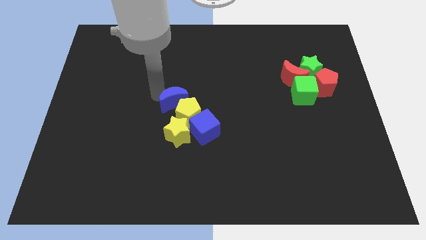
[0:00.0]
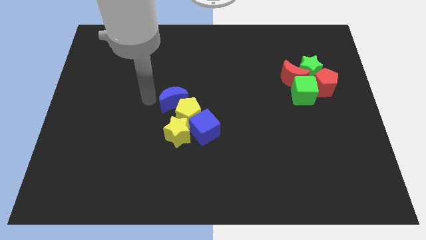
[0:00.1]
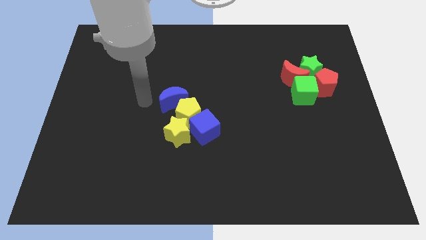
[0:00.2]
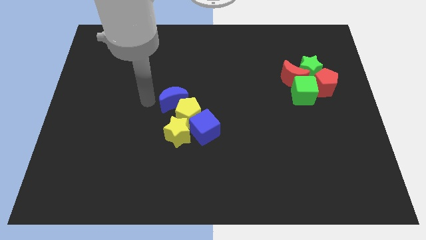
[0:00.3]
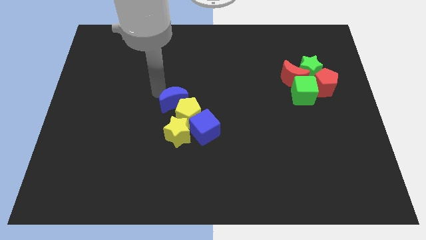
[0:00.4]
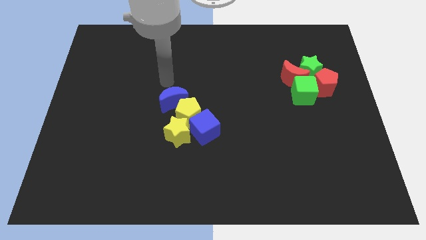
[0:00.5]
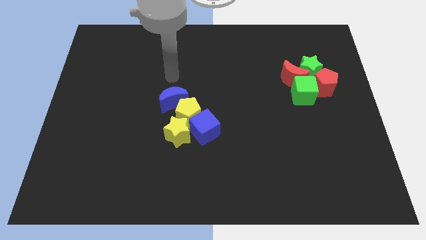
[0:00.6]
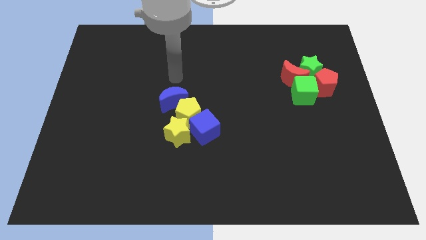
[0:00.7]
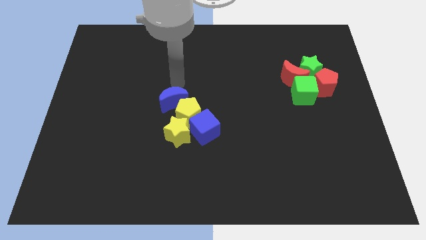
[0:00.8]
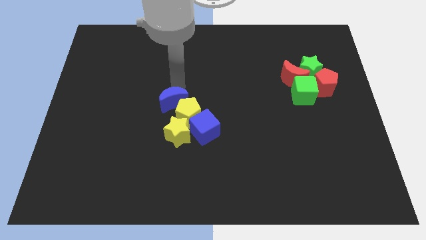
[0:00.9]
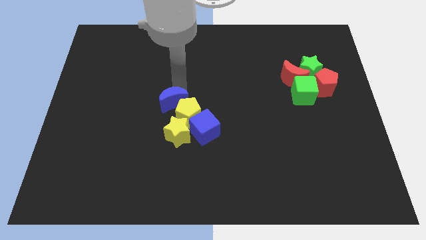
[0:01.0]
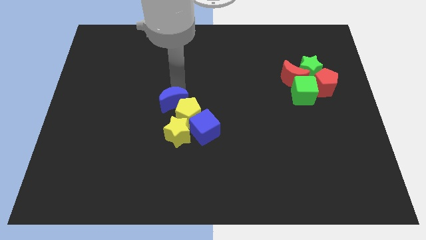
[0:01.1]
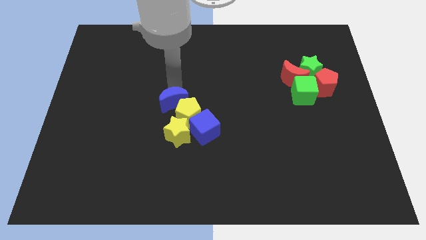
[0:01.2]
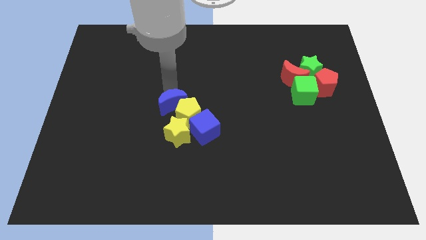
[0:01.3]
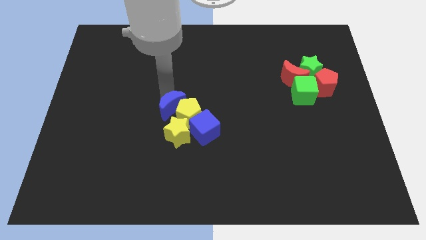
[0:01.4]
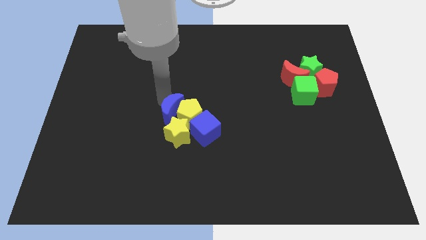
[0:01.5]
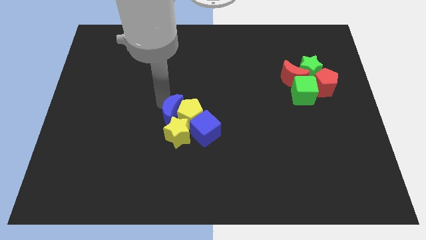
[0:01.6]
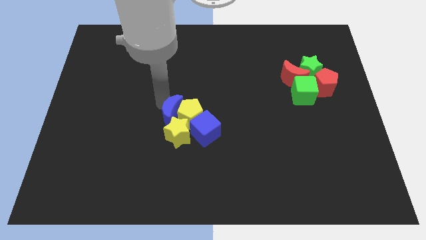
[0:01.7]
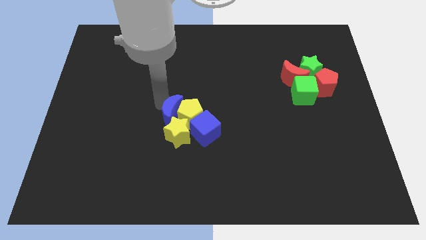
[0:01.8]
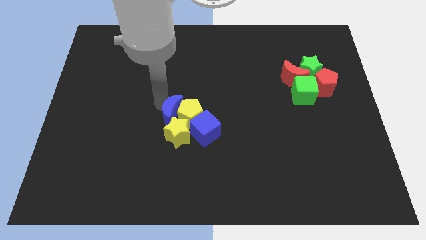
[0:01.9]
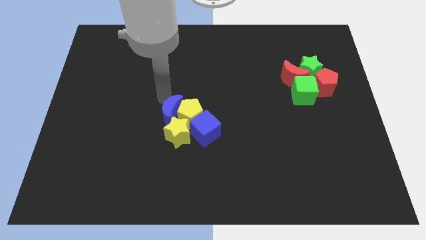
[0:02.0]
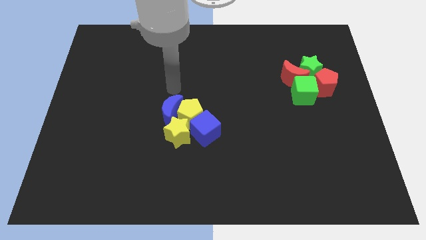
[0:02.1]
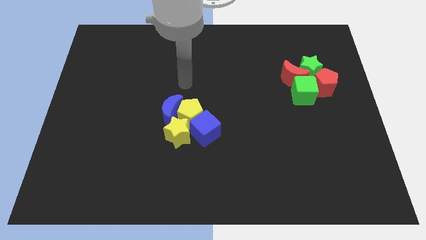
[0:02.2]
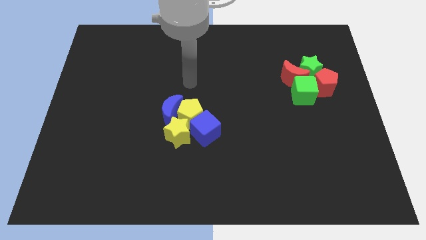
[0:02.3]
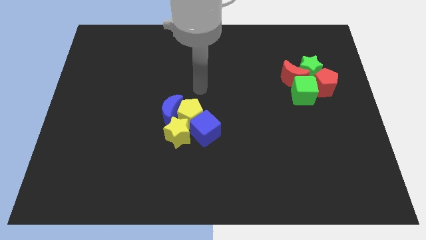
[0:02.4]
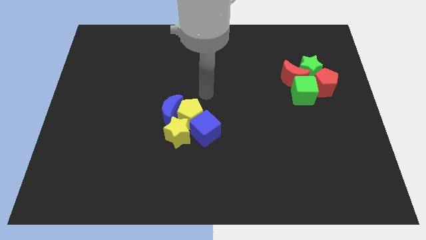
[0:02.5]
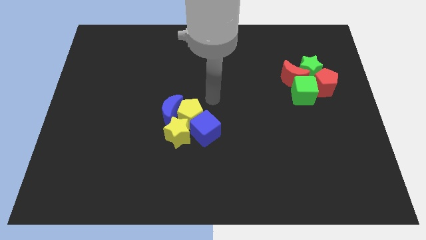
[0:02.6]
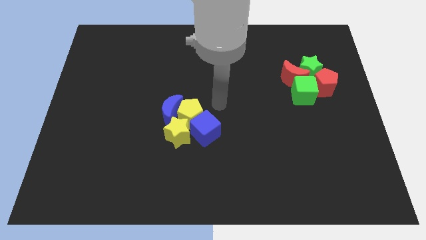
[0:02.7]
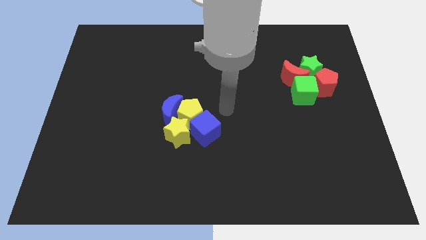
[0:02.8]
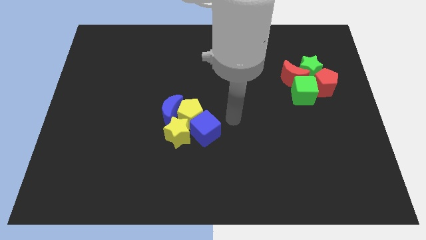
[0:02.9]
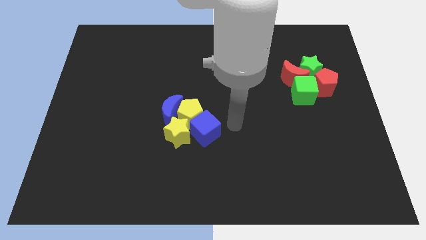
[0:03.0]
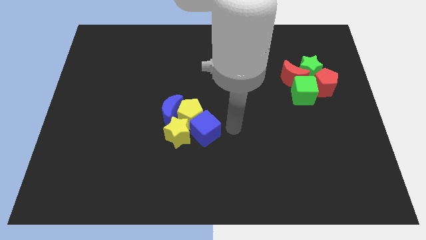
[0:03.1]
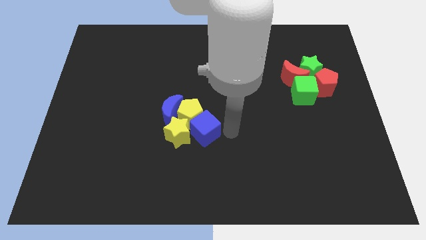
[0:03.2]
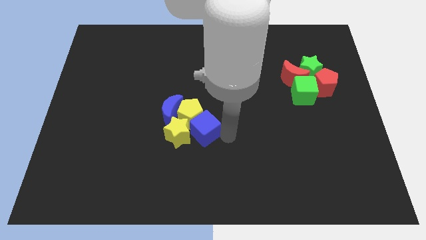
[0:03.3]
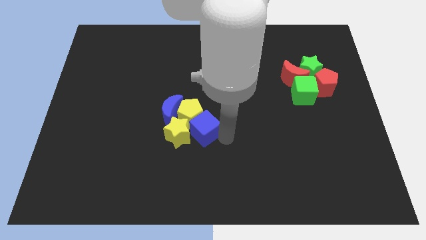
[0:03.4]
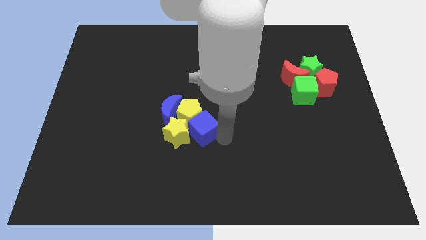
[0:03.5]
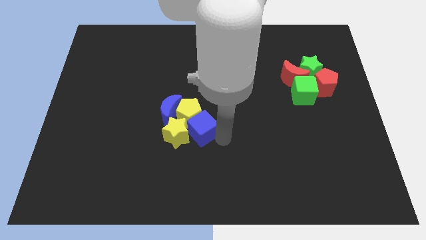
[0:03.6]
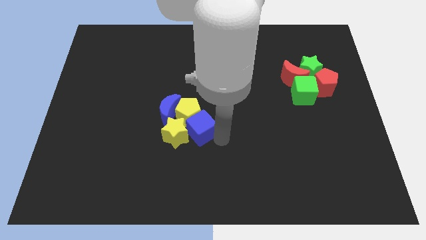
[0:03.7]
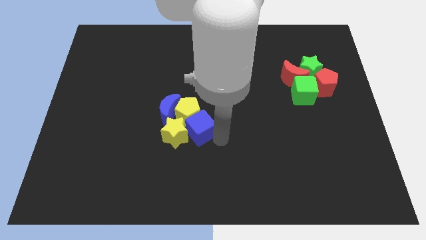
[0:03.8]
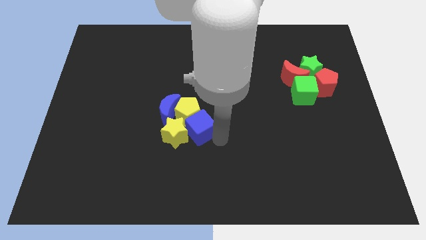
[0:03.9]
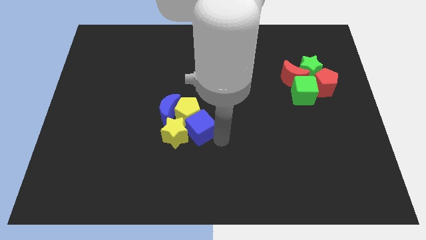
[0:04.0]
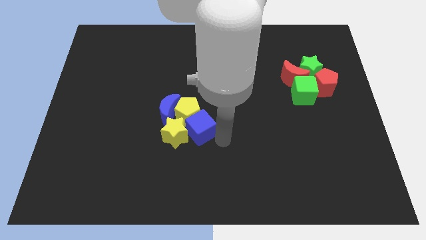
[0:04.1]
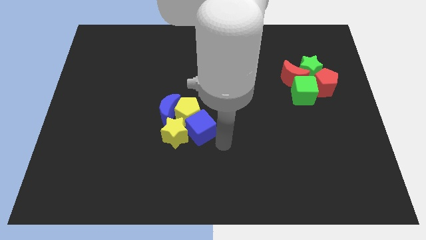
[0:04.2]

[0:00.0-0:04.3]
push blue crescent into yellow pentagon

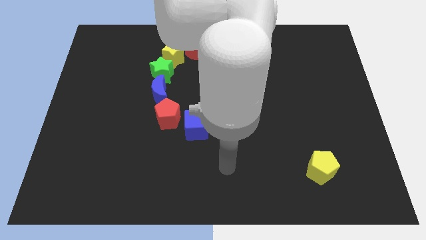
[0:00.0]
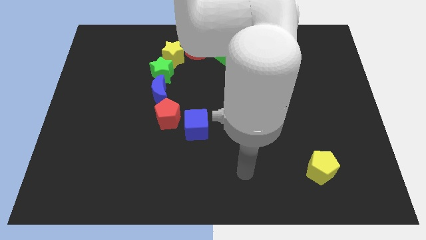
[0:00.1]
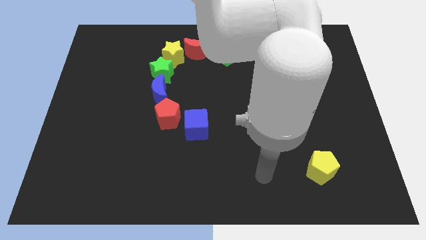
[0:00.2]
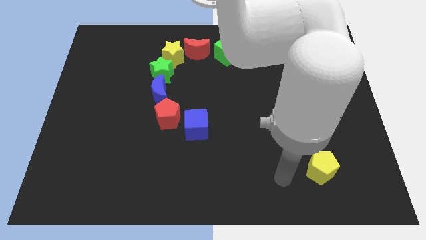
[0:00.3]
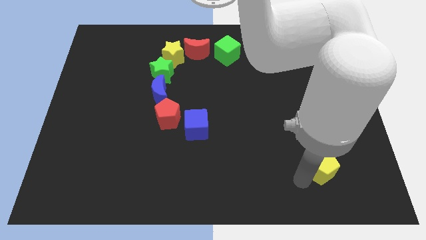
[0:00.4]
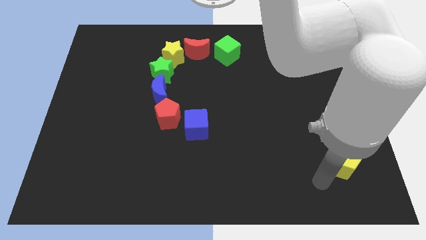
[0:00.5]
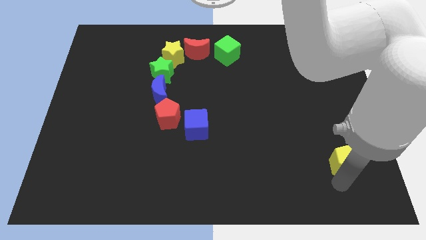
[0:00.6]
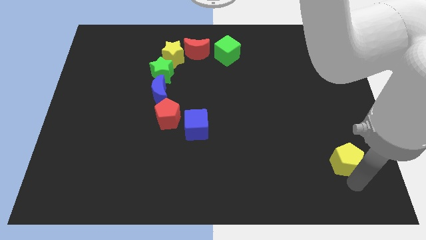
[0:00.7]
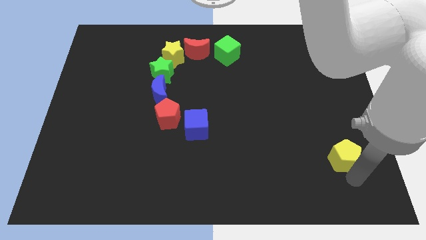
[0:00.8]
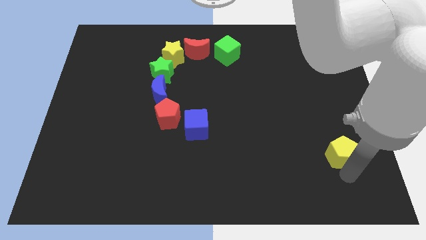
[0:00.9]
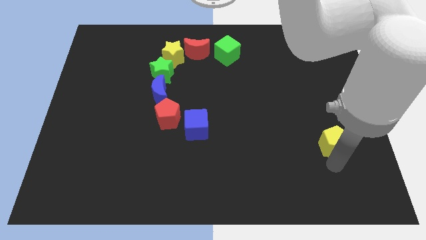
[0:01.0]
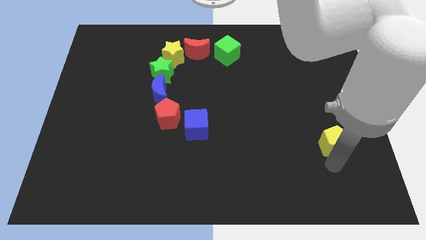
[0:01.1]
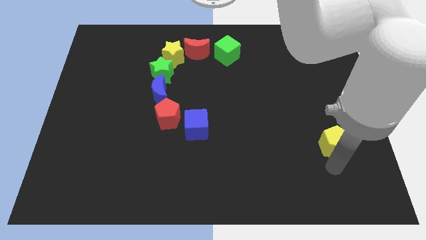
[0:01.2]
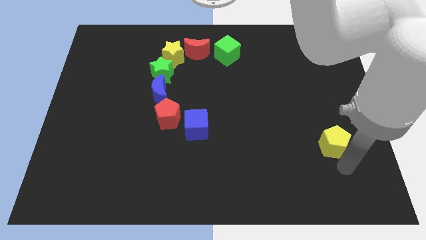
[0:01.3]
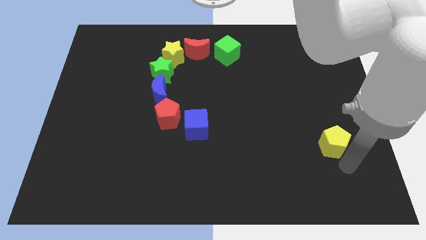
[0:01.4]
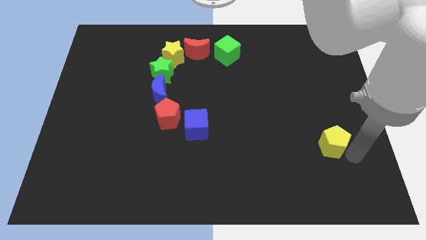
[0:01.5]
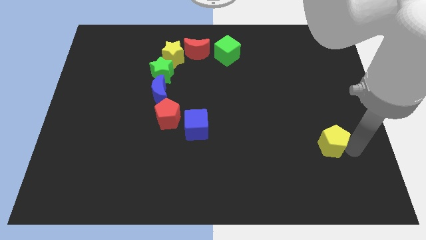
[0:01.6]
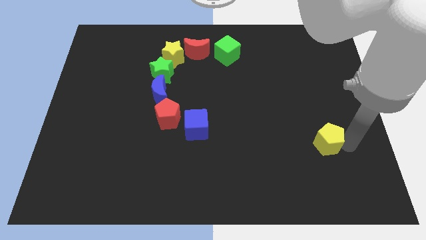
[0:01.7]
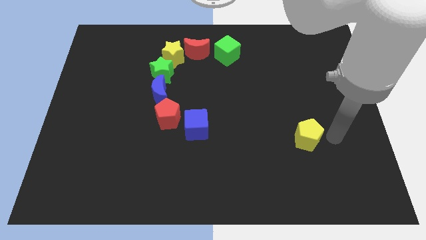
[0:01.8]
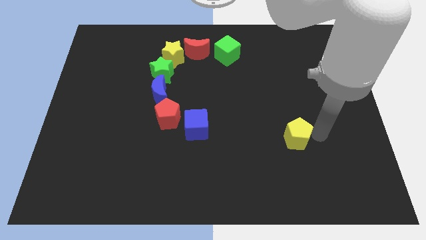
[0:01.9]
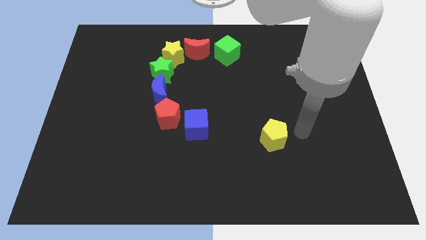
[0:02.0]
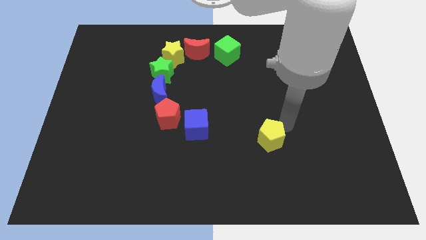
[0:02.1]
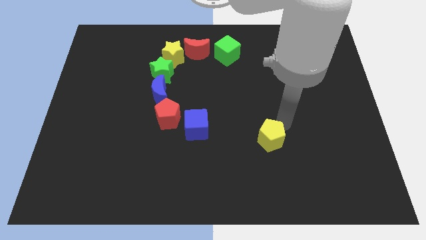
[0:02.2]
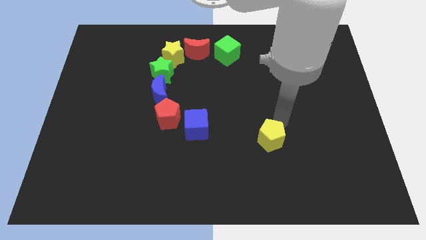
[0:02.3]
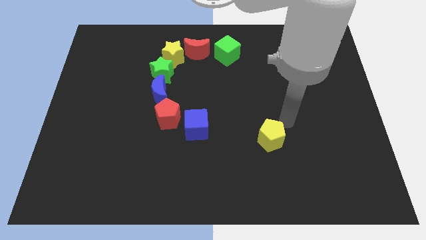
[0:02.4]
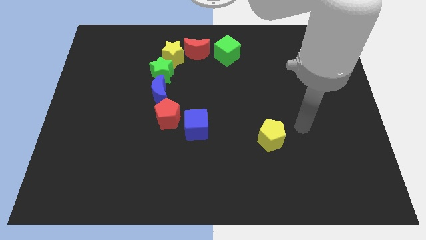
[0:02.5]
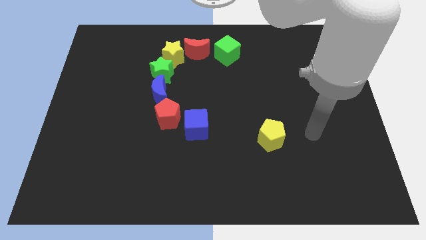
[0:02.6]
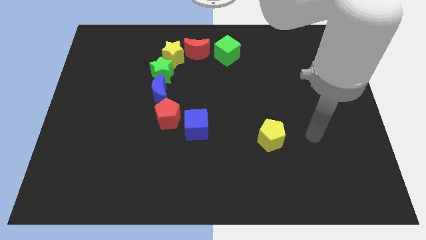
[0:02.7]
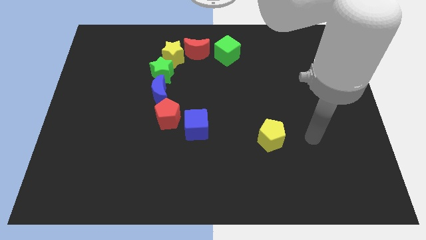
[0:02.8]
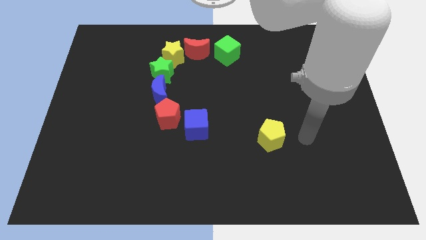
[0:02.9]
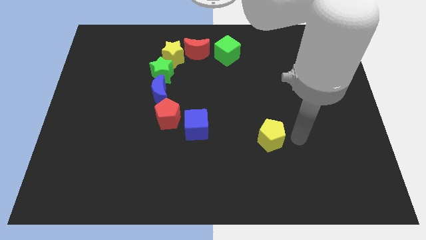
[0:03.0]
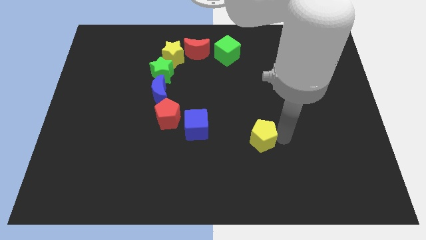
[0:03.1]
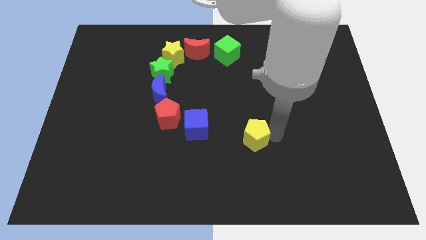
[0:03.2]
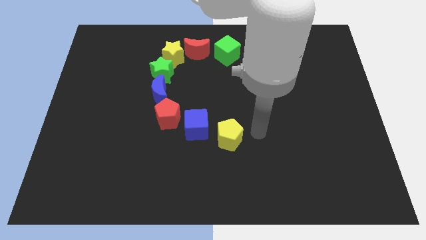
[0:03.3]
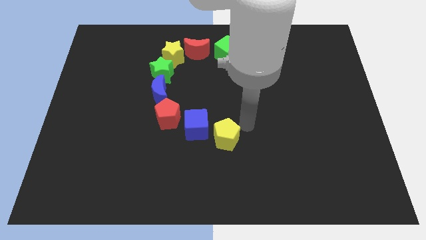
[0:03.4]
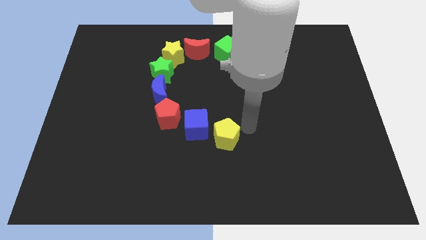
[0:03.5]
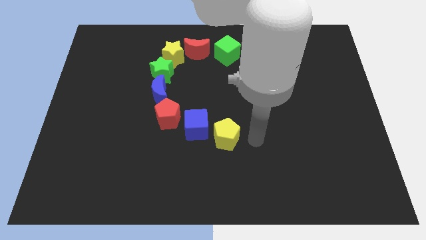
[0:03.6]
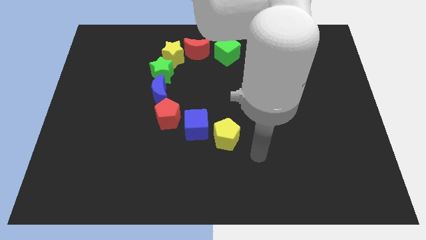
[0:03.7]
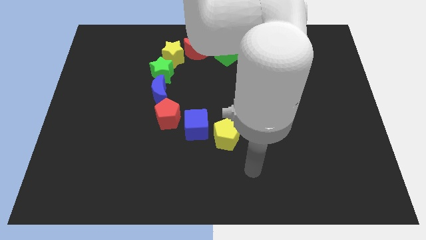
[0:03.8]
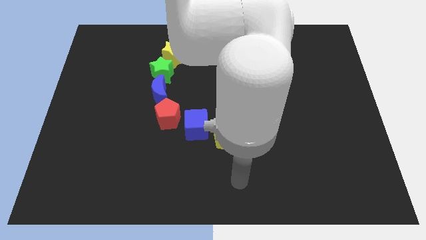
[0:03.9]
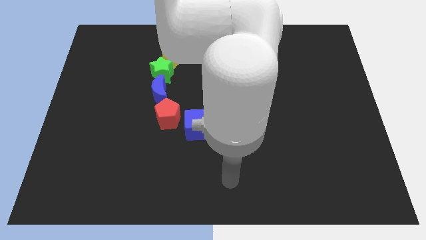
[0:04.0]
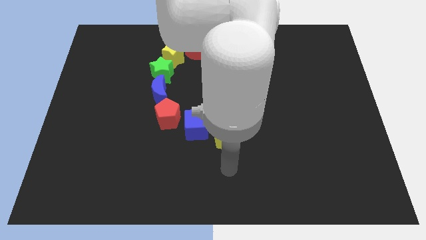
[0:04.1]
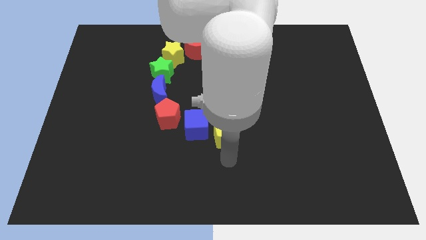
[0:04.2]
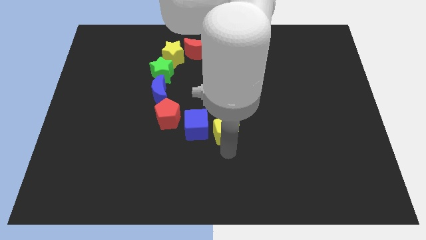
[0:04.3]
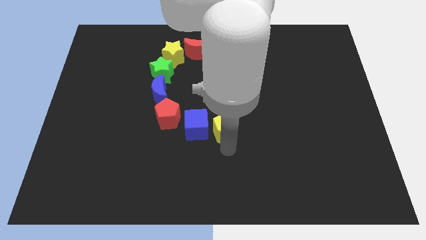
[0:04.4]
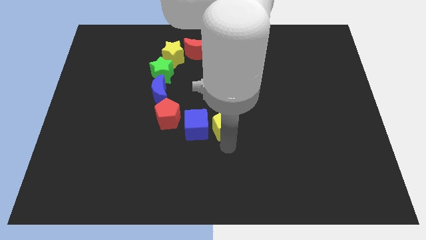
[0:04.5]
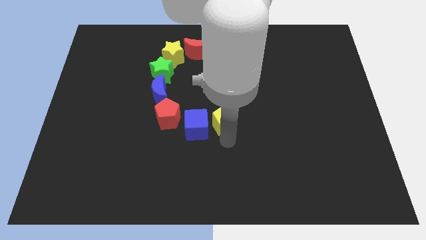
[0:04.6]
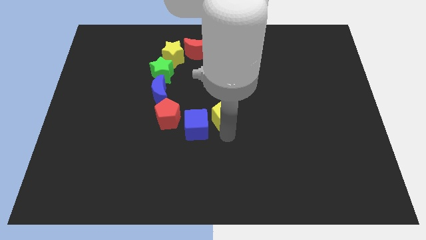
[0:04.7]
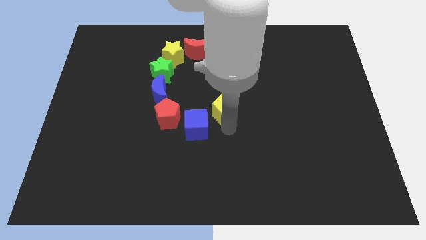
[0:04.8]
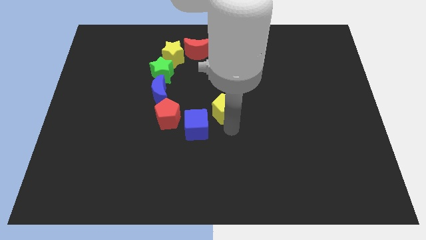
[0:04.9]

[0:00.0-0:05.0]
move the yellow pentagon close to the blue cube
